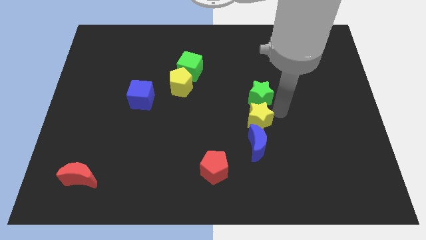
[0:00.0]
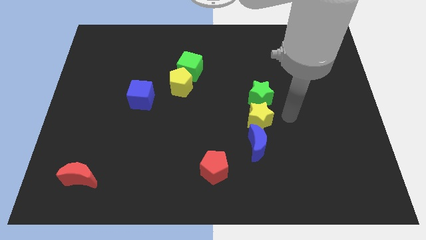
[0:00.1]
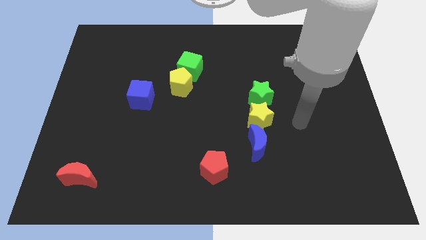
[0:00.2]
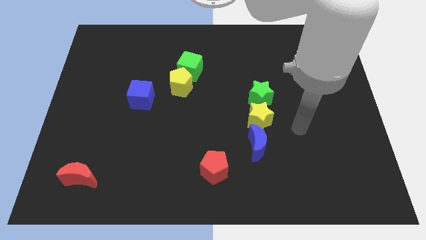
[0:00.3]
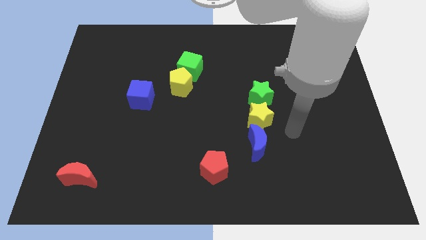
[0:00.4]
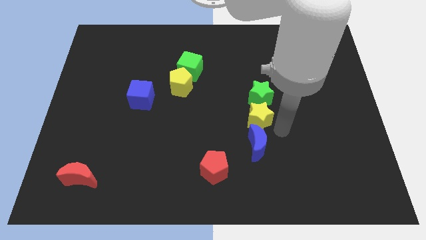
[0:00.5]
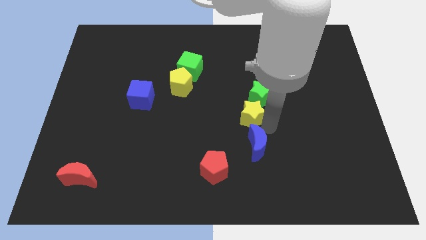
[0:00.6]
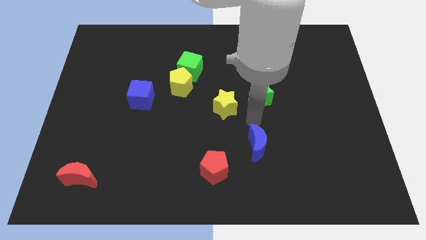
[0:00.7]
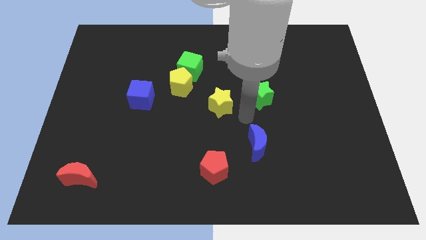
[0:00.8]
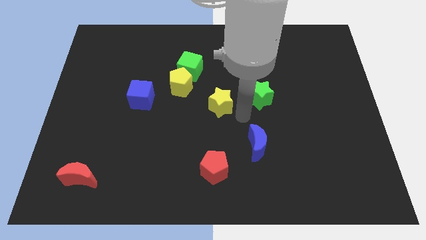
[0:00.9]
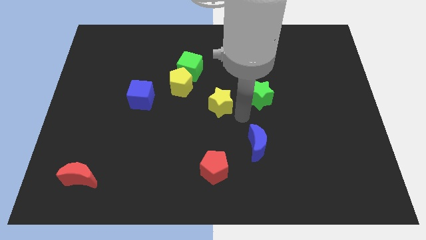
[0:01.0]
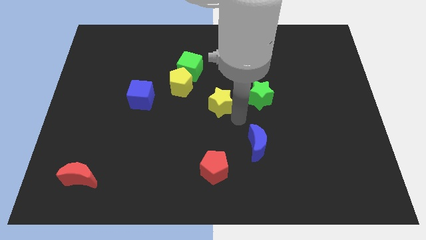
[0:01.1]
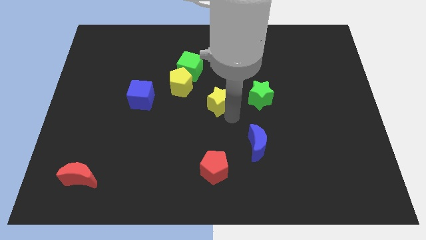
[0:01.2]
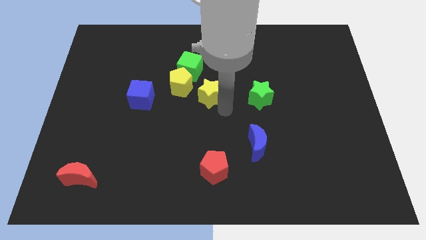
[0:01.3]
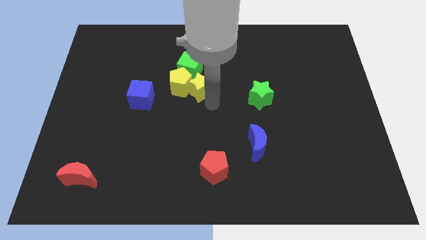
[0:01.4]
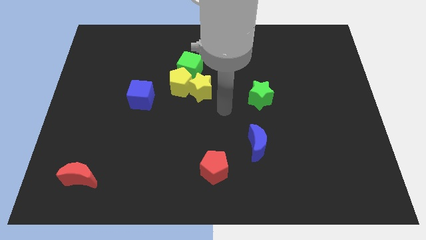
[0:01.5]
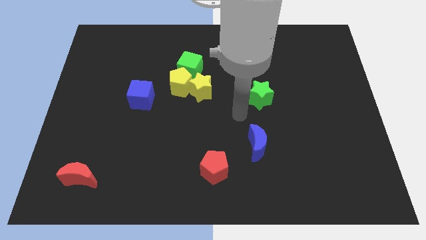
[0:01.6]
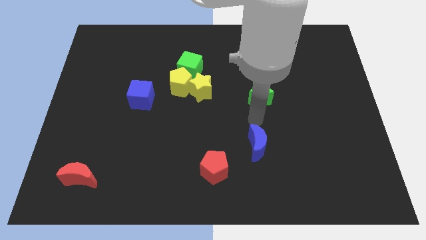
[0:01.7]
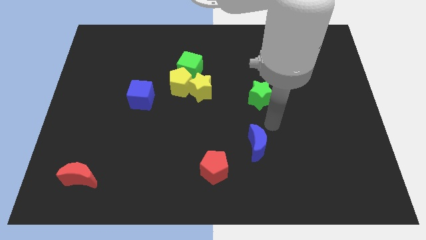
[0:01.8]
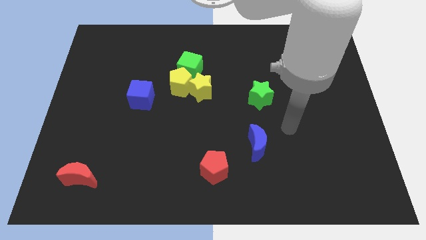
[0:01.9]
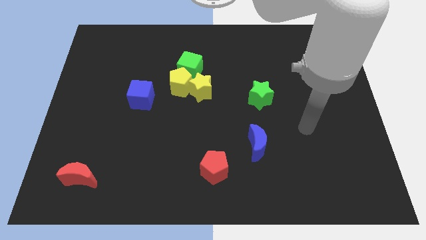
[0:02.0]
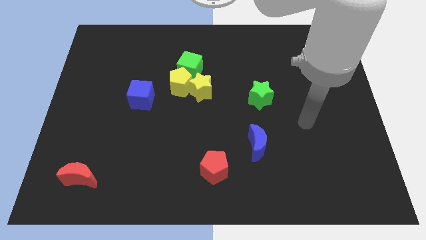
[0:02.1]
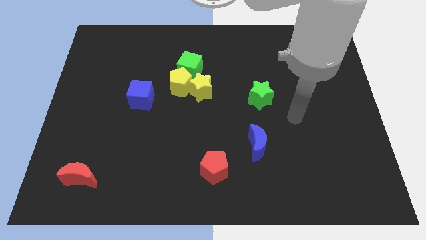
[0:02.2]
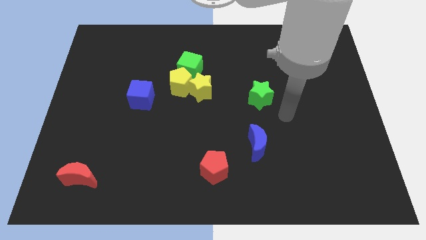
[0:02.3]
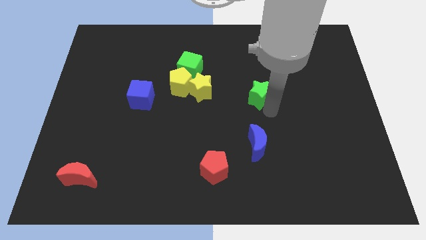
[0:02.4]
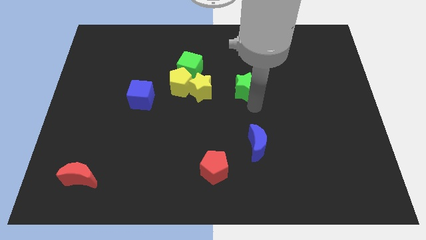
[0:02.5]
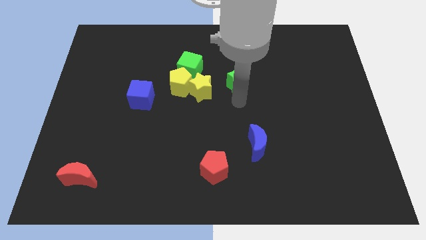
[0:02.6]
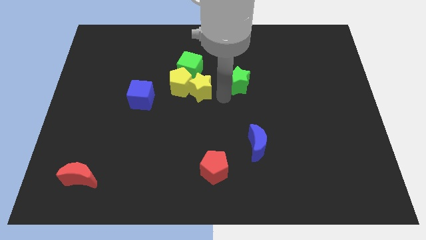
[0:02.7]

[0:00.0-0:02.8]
move yellow star right beside the yellow pentagon

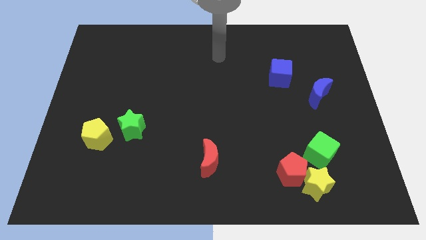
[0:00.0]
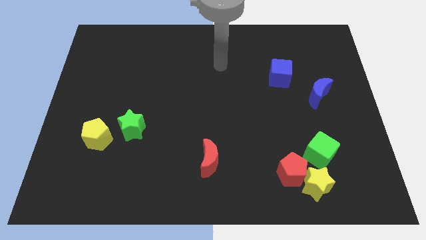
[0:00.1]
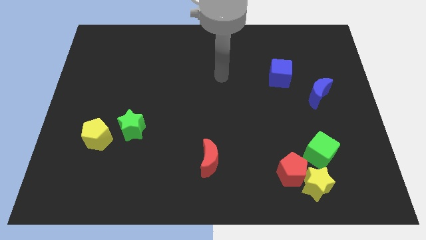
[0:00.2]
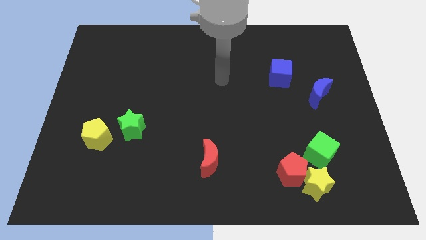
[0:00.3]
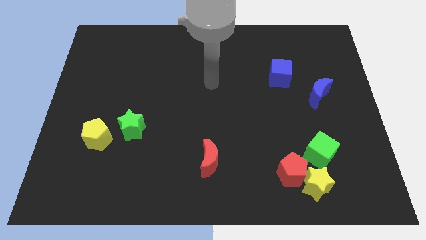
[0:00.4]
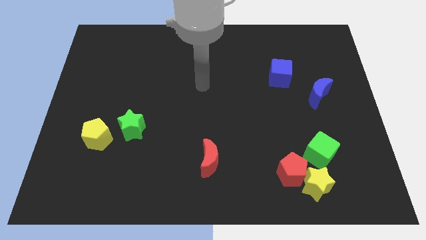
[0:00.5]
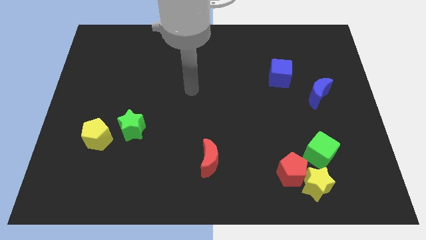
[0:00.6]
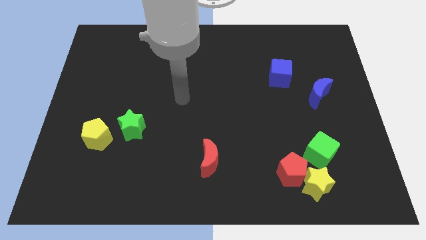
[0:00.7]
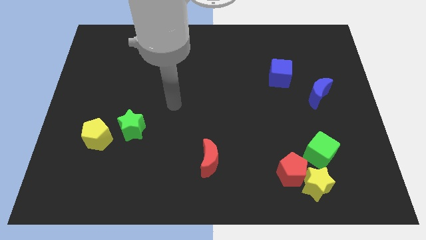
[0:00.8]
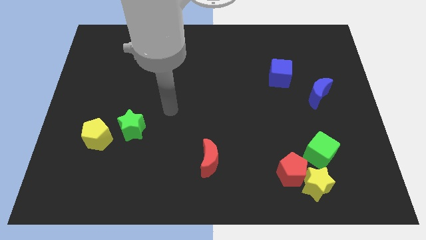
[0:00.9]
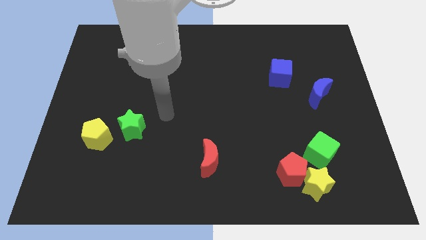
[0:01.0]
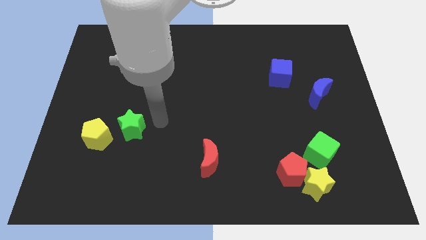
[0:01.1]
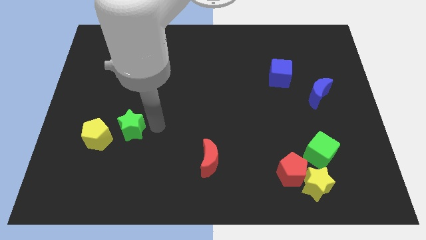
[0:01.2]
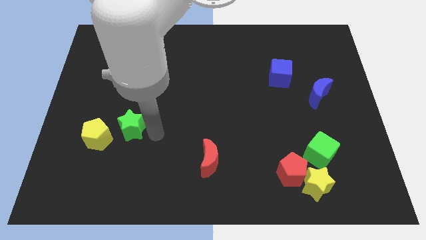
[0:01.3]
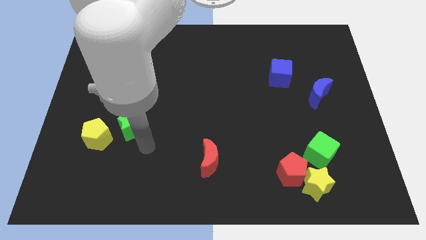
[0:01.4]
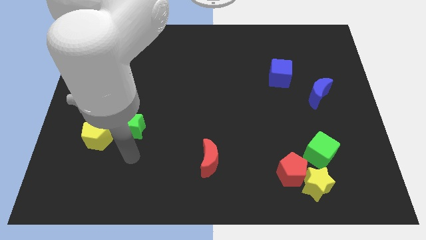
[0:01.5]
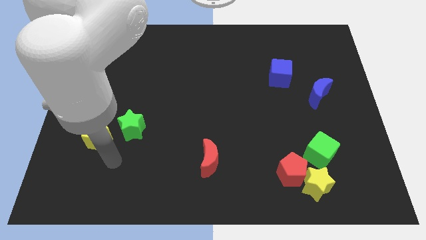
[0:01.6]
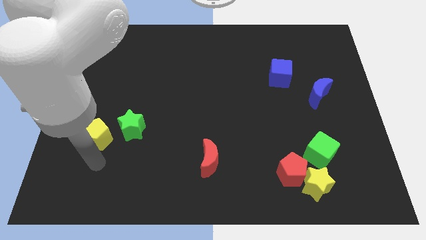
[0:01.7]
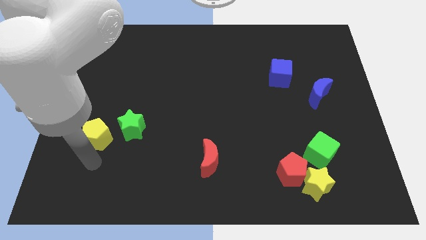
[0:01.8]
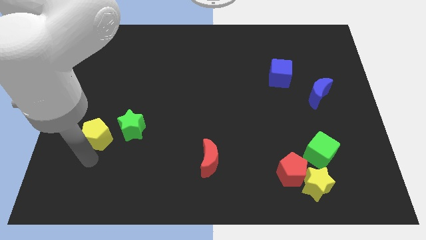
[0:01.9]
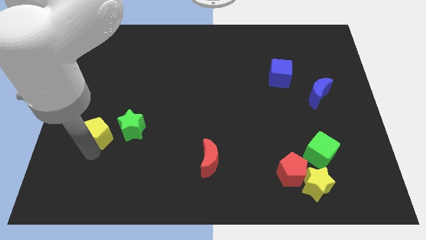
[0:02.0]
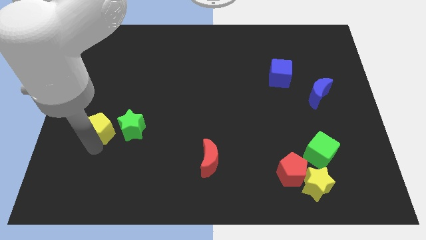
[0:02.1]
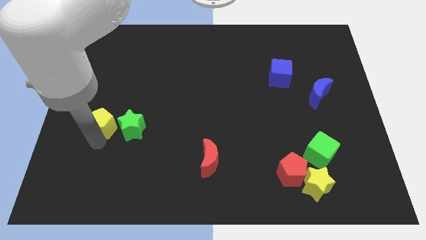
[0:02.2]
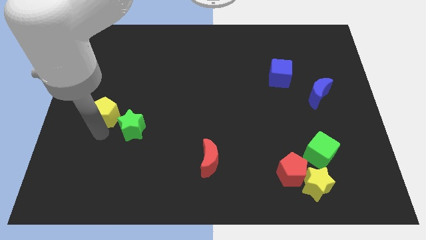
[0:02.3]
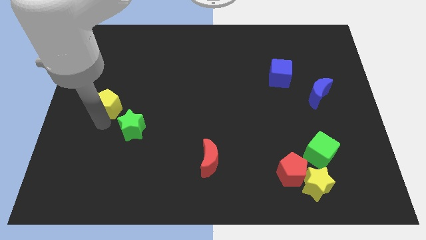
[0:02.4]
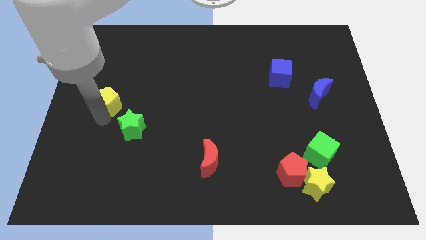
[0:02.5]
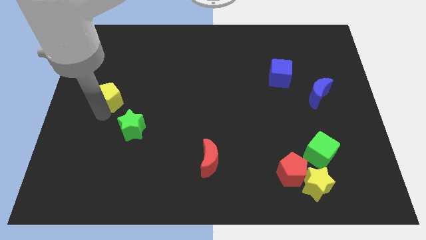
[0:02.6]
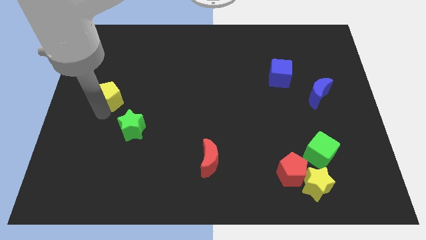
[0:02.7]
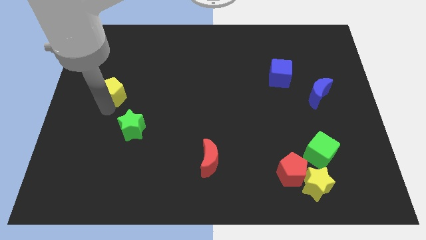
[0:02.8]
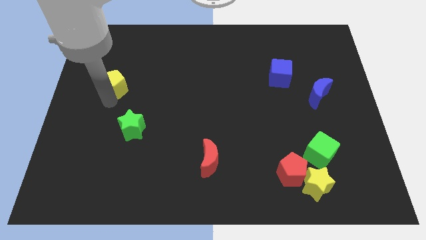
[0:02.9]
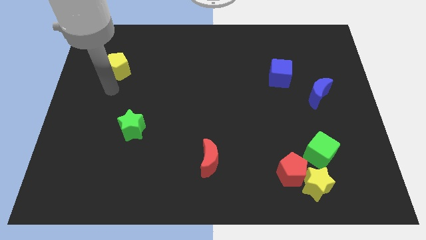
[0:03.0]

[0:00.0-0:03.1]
move the yellow pentagon towards the top left of the board

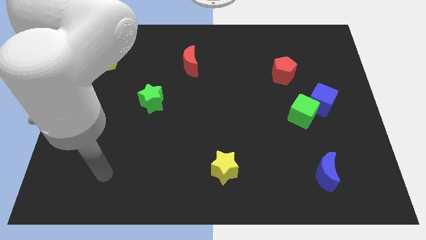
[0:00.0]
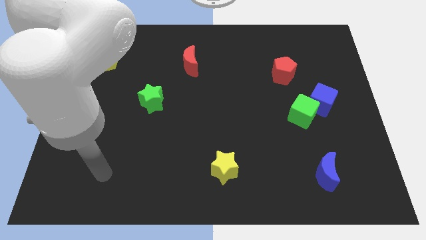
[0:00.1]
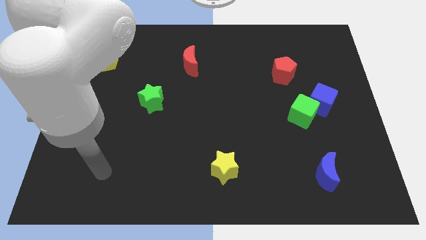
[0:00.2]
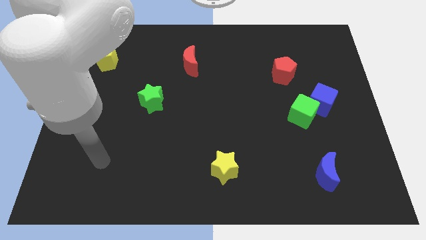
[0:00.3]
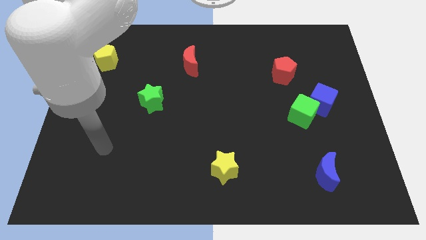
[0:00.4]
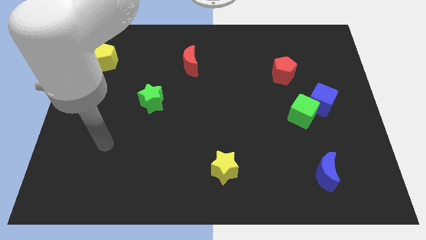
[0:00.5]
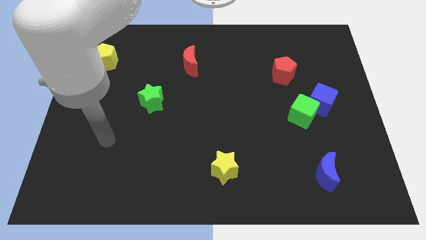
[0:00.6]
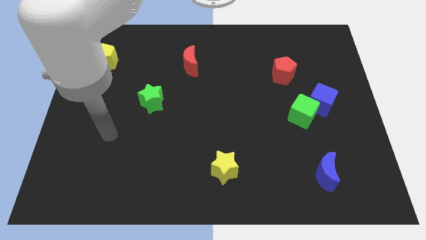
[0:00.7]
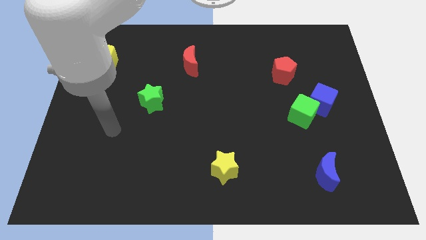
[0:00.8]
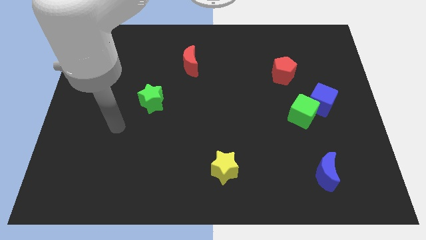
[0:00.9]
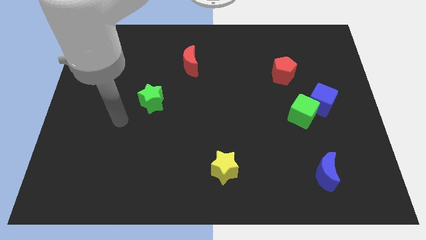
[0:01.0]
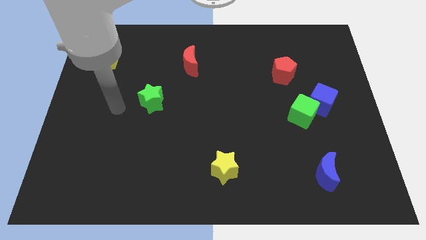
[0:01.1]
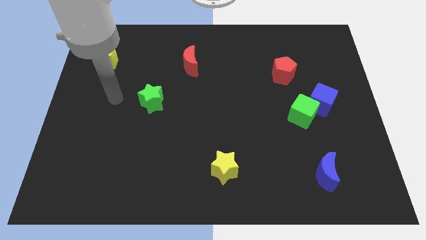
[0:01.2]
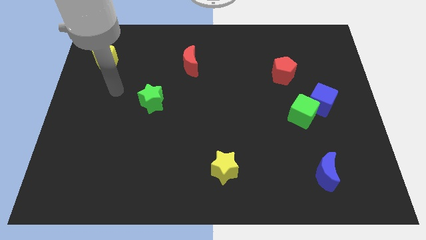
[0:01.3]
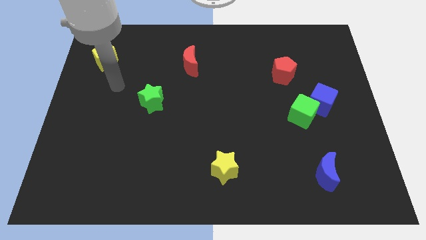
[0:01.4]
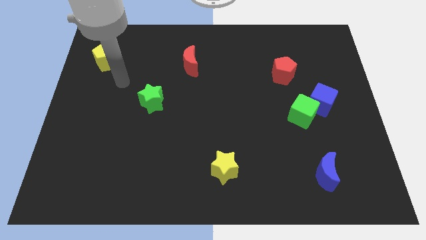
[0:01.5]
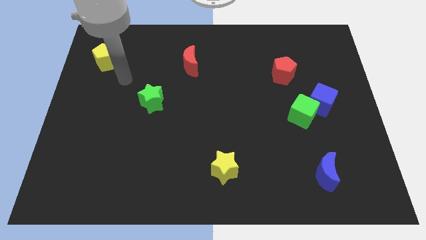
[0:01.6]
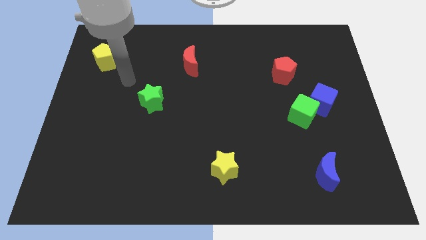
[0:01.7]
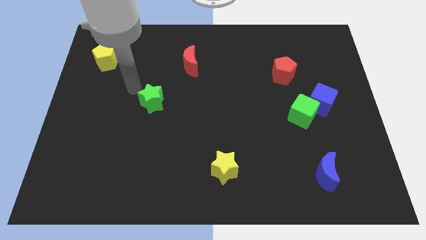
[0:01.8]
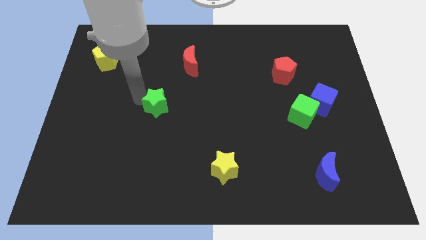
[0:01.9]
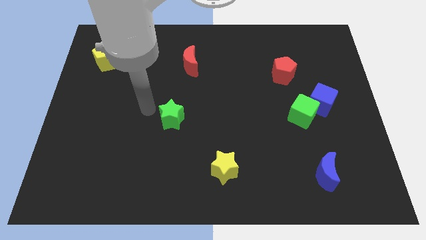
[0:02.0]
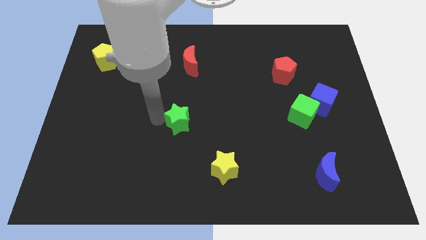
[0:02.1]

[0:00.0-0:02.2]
move the green star towards the yellow star

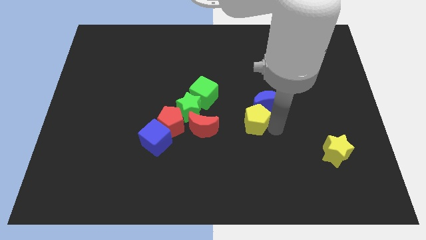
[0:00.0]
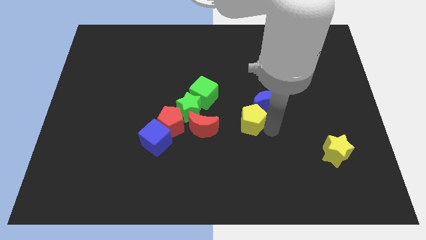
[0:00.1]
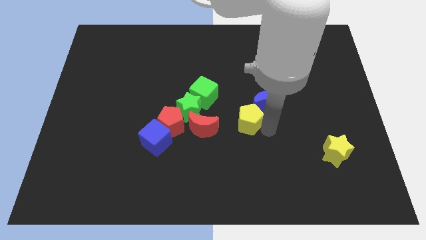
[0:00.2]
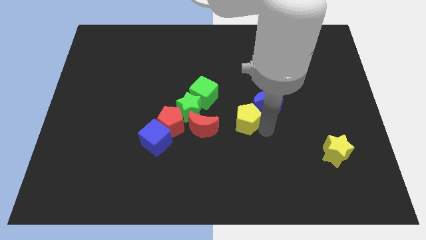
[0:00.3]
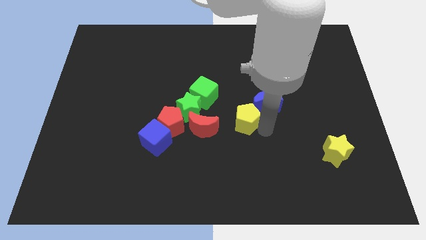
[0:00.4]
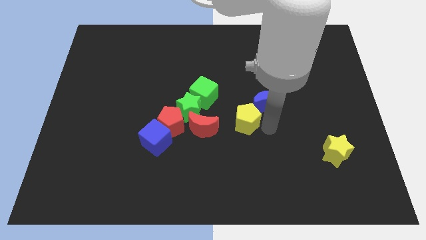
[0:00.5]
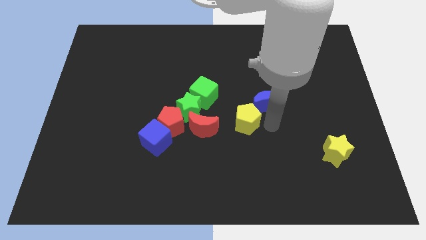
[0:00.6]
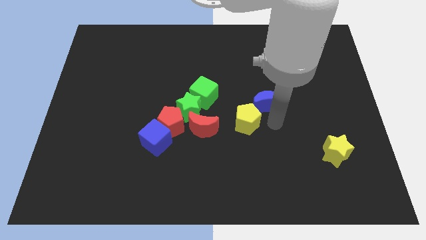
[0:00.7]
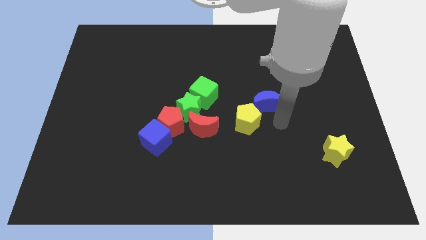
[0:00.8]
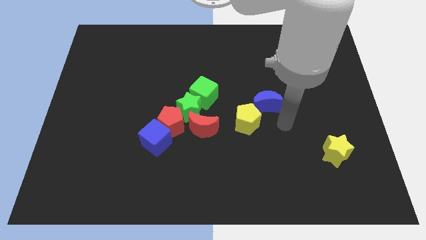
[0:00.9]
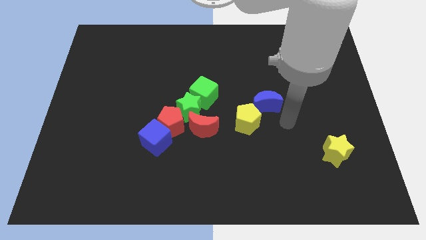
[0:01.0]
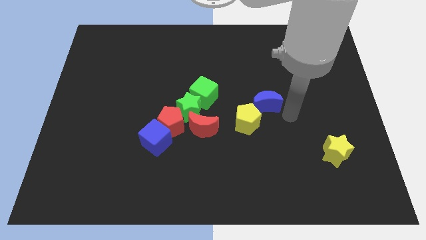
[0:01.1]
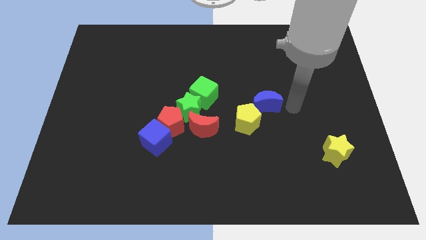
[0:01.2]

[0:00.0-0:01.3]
move the yellow pentagon towards the right of the red crescent
